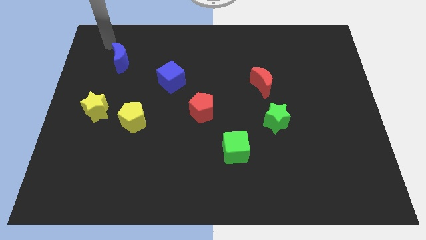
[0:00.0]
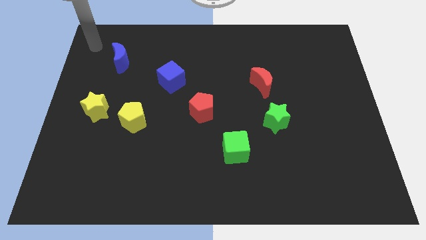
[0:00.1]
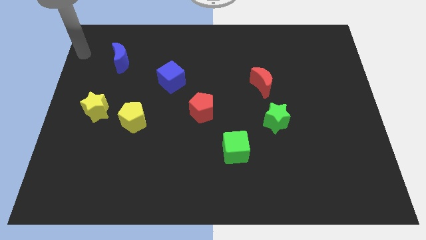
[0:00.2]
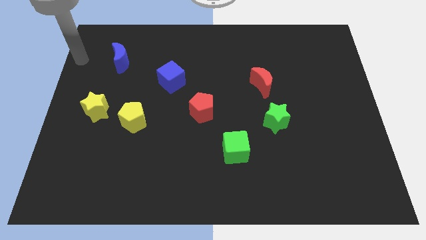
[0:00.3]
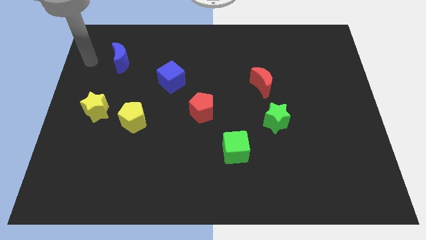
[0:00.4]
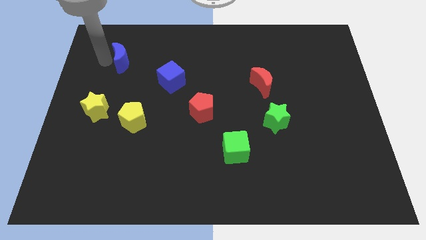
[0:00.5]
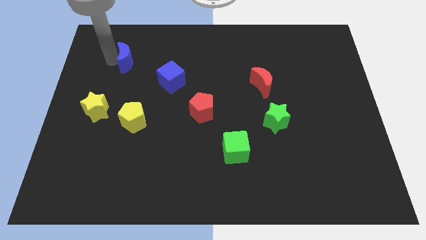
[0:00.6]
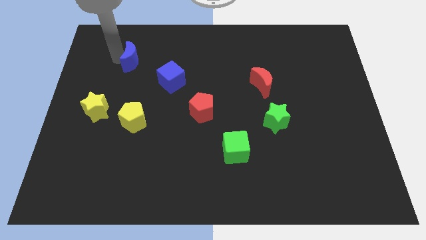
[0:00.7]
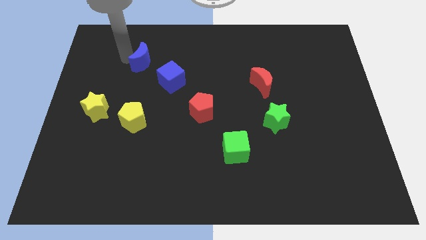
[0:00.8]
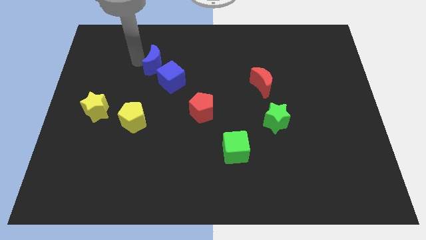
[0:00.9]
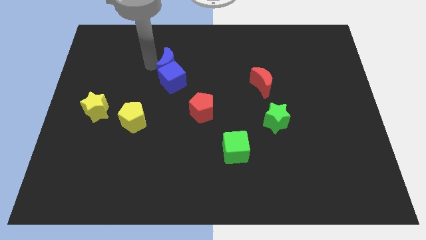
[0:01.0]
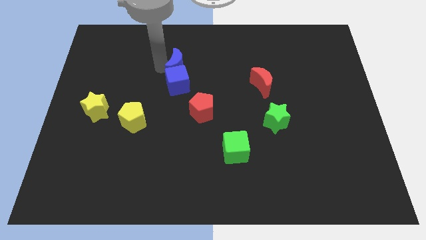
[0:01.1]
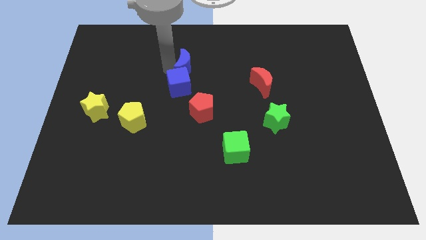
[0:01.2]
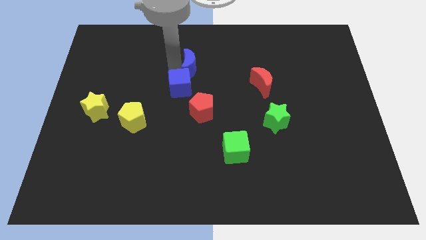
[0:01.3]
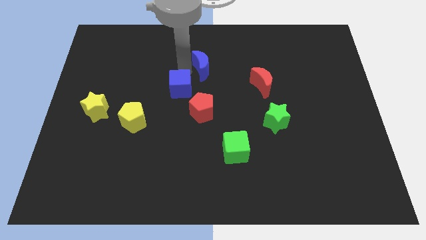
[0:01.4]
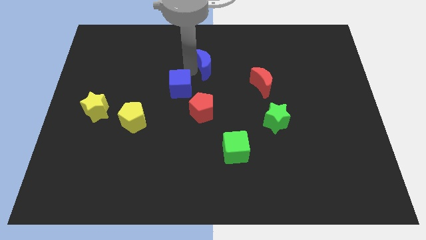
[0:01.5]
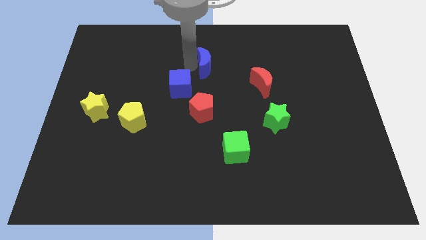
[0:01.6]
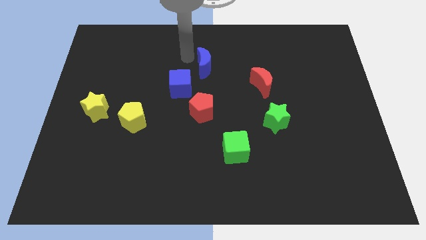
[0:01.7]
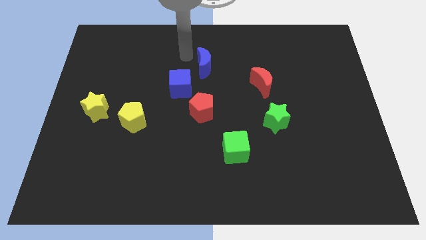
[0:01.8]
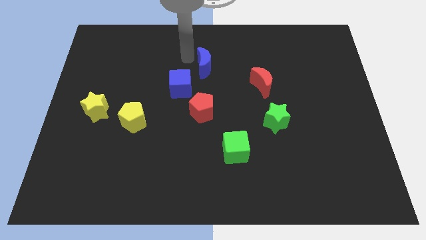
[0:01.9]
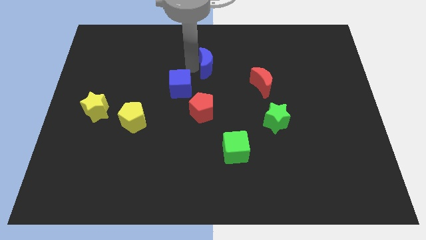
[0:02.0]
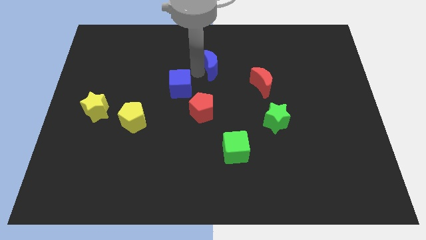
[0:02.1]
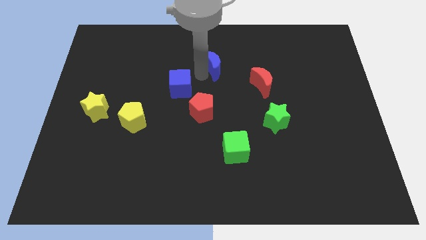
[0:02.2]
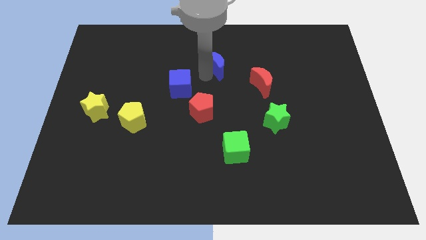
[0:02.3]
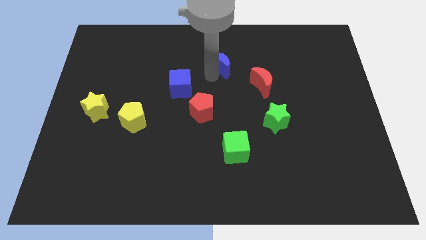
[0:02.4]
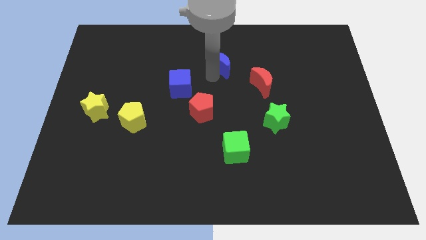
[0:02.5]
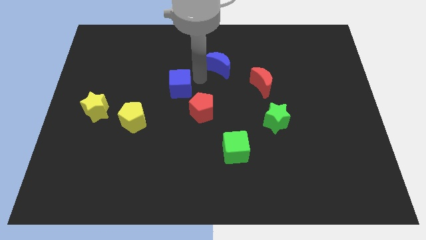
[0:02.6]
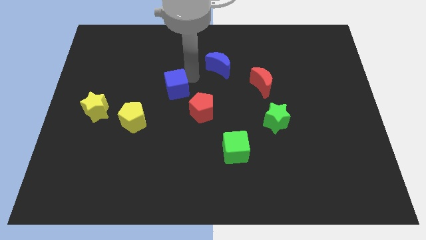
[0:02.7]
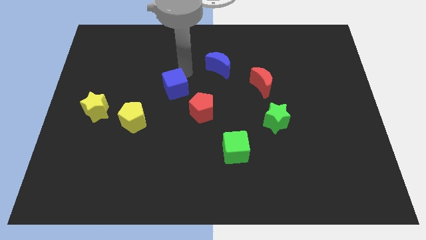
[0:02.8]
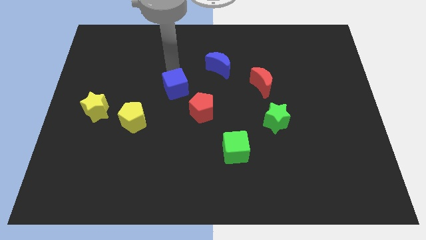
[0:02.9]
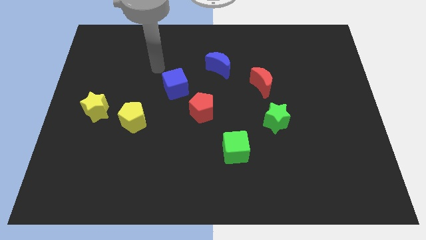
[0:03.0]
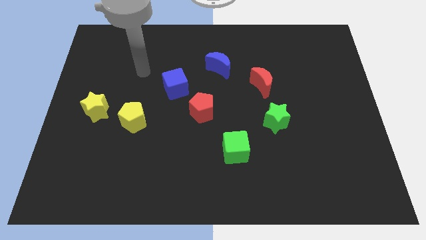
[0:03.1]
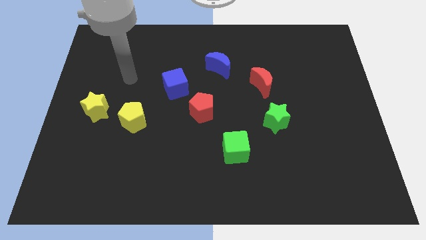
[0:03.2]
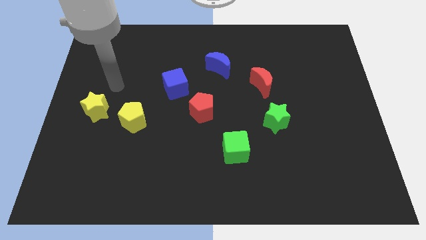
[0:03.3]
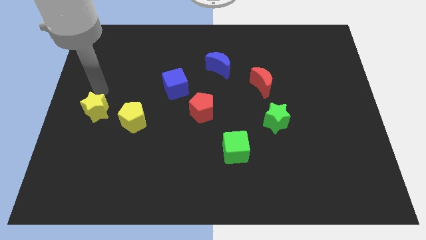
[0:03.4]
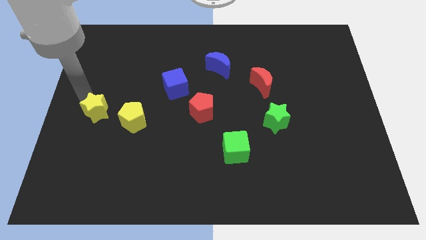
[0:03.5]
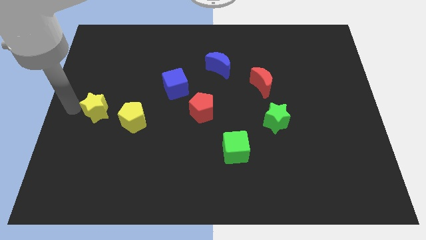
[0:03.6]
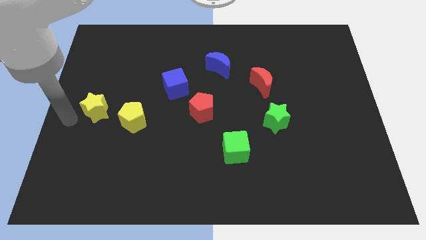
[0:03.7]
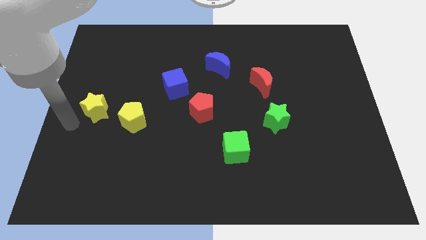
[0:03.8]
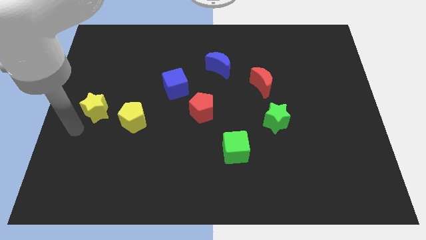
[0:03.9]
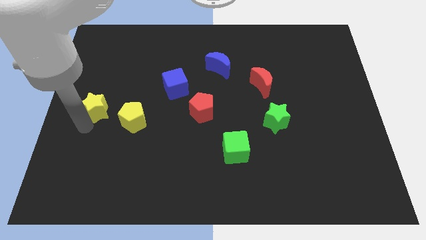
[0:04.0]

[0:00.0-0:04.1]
push the blue blocks slightly to the right

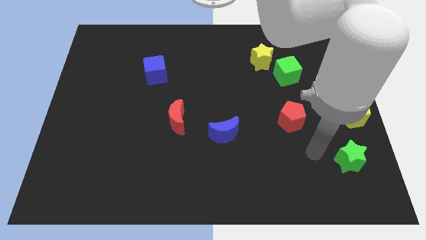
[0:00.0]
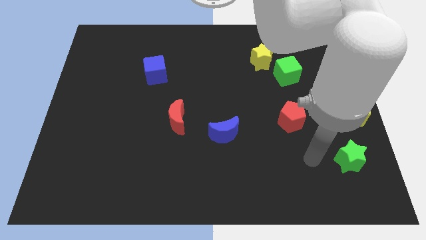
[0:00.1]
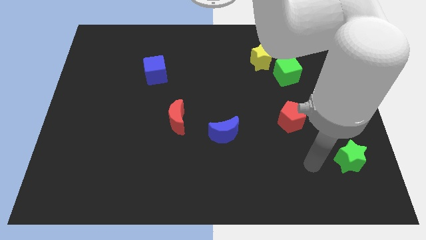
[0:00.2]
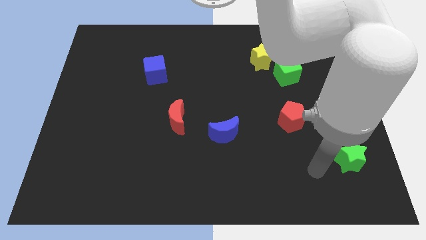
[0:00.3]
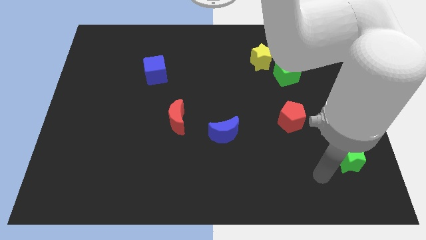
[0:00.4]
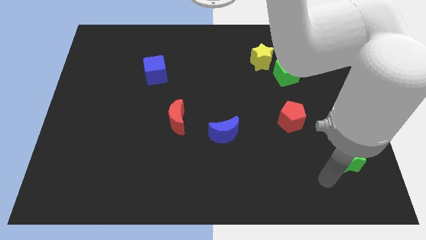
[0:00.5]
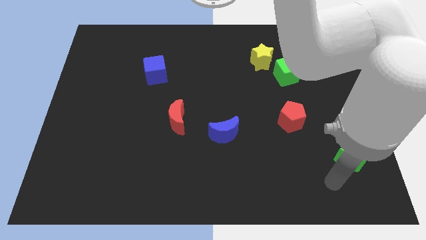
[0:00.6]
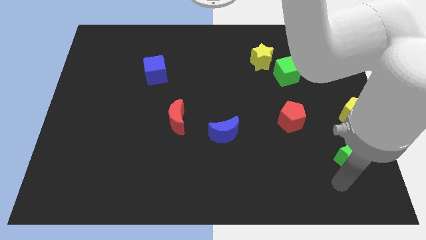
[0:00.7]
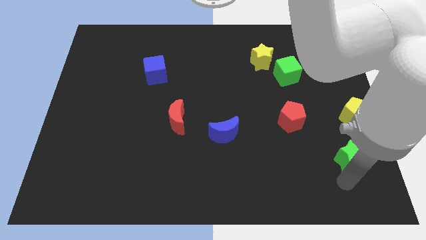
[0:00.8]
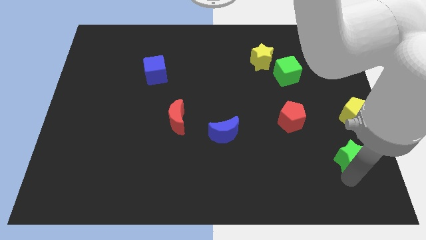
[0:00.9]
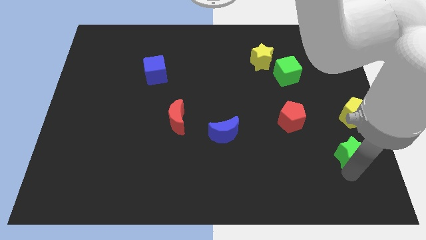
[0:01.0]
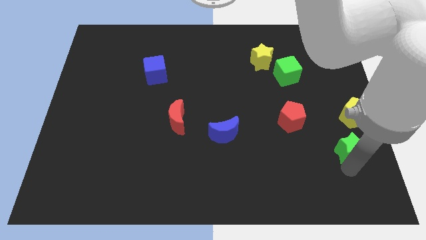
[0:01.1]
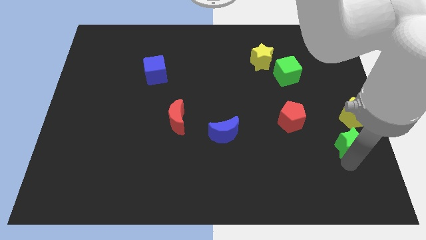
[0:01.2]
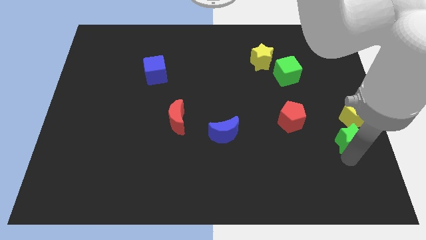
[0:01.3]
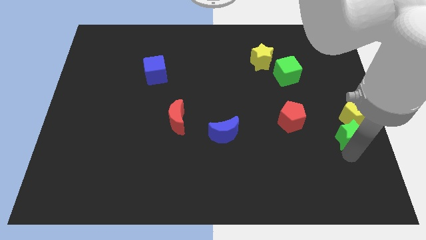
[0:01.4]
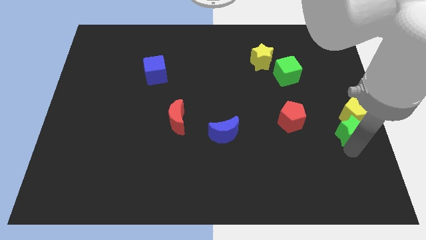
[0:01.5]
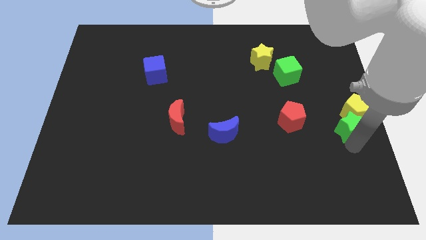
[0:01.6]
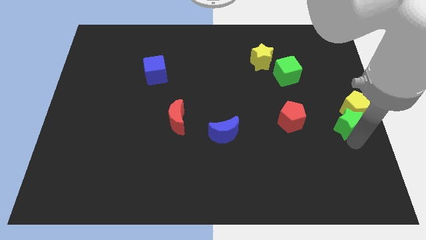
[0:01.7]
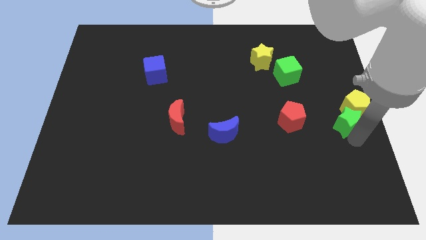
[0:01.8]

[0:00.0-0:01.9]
push the yellow pentagon with the green star towards the right center of the board

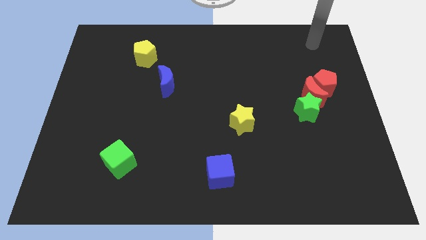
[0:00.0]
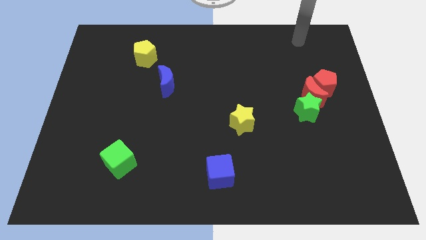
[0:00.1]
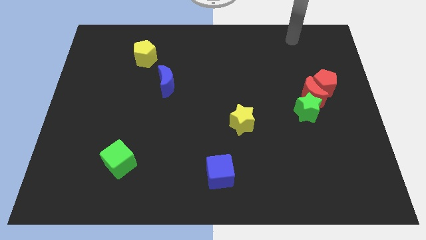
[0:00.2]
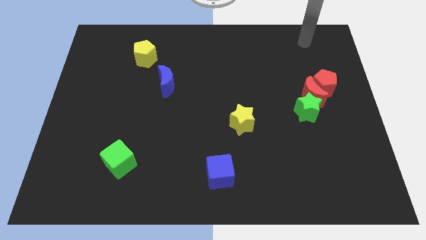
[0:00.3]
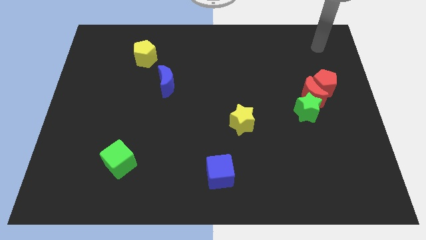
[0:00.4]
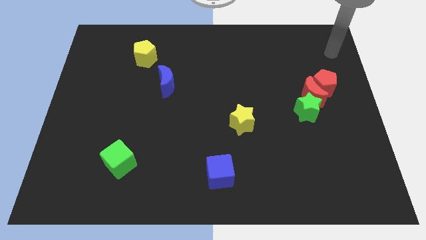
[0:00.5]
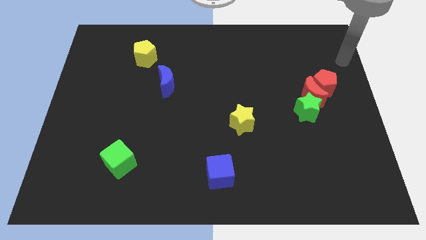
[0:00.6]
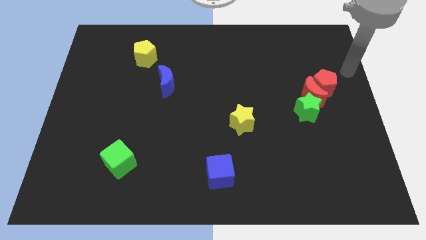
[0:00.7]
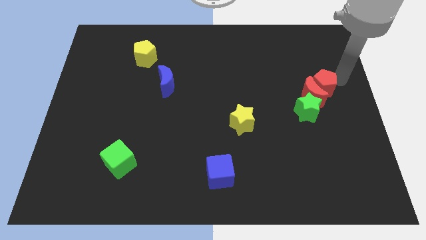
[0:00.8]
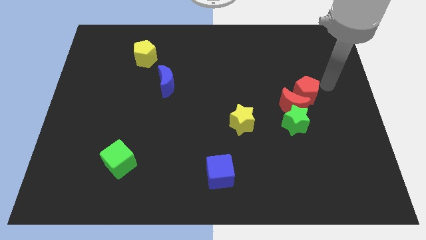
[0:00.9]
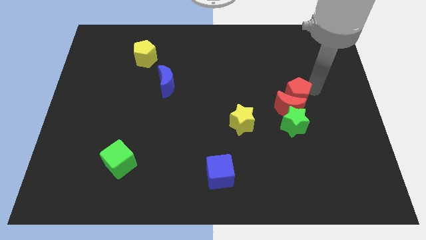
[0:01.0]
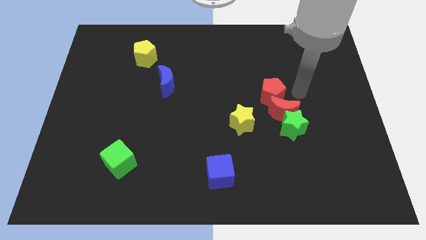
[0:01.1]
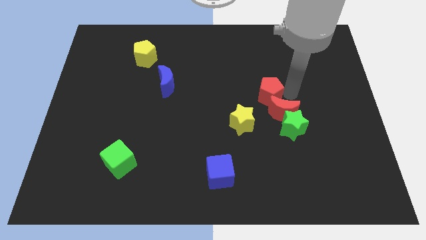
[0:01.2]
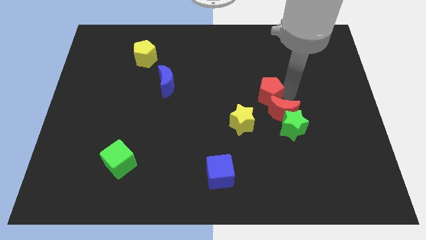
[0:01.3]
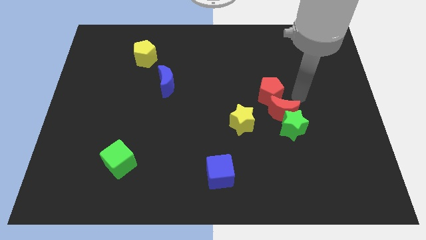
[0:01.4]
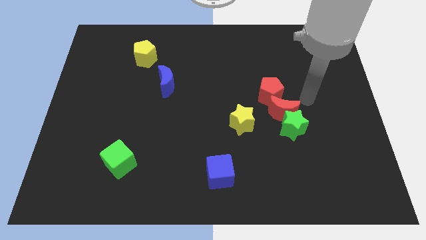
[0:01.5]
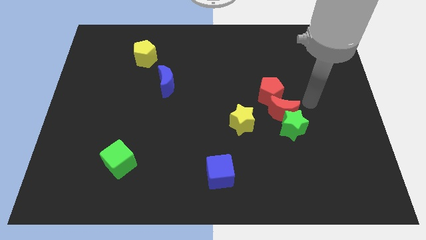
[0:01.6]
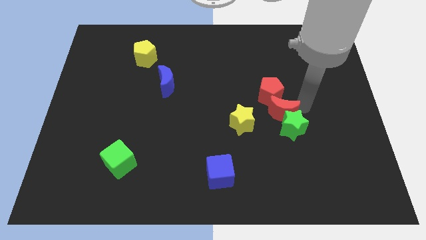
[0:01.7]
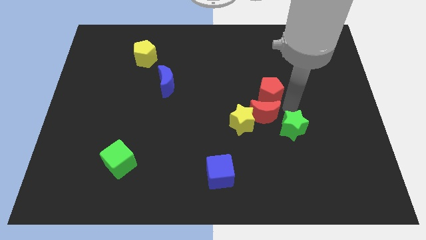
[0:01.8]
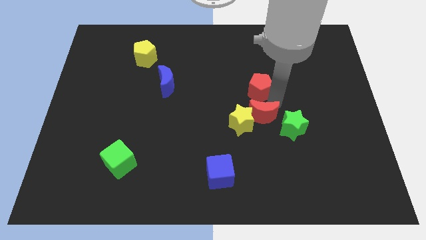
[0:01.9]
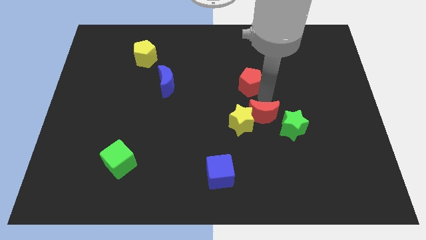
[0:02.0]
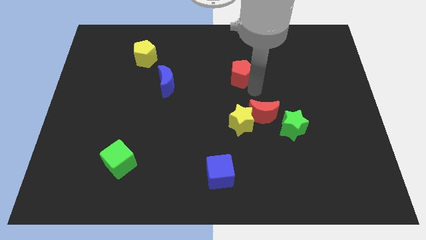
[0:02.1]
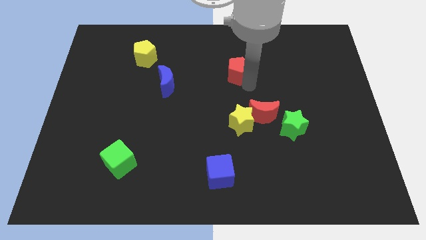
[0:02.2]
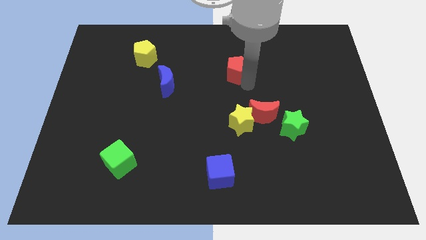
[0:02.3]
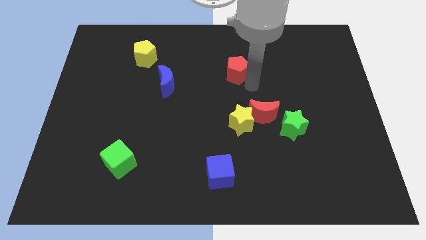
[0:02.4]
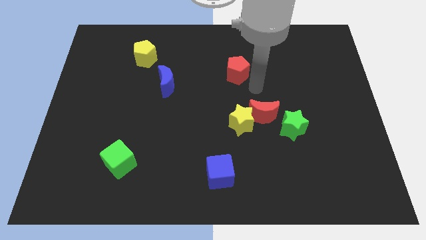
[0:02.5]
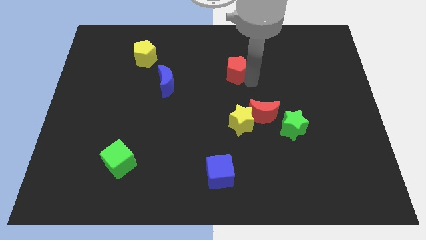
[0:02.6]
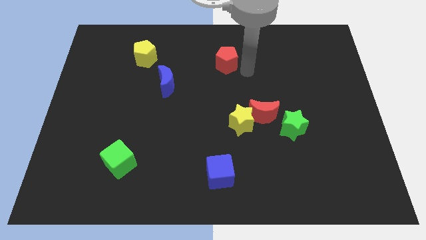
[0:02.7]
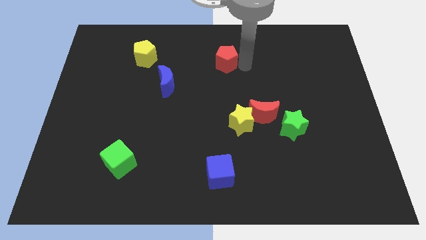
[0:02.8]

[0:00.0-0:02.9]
separate red pentagon from red crescent
